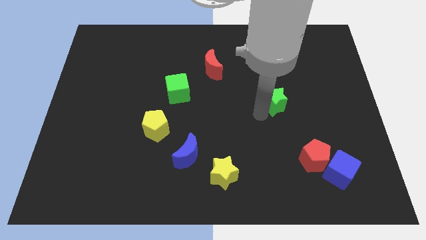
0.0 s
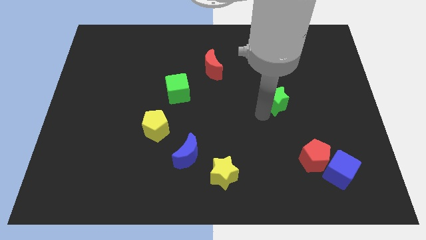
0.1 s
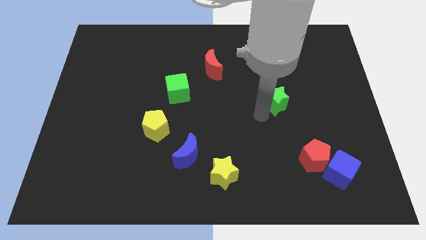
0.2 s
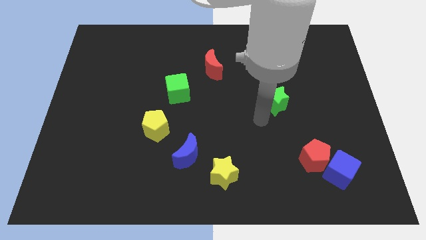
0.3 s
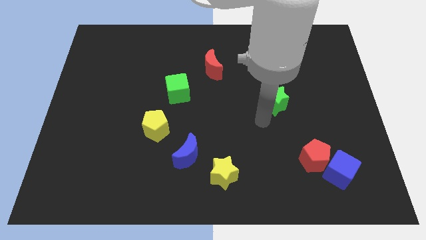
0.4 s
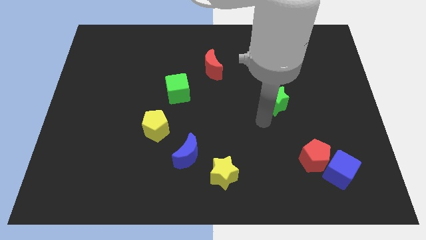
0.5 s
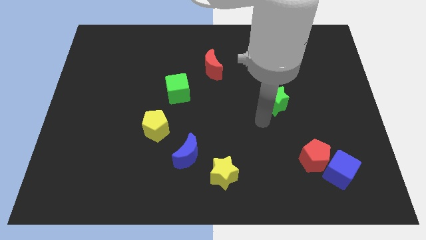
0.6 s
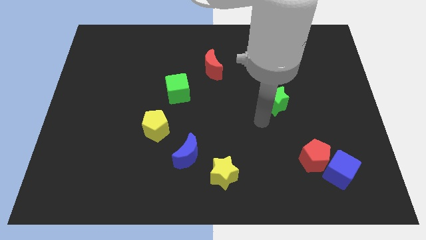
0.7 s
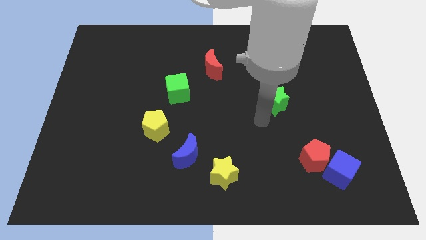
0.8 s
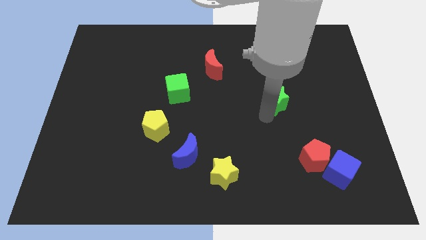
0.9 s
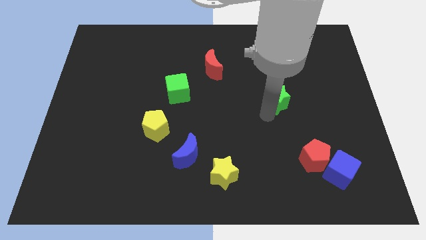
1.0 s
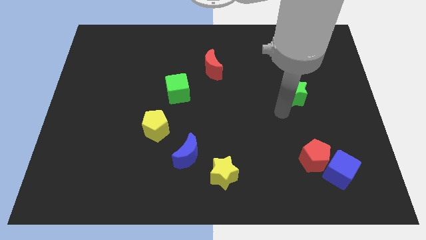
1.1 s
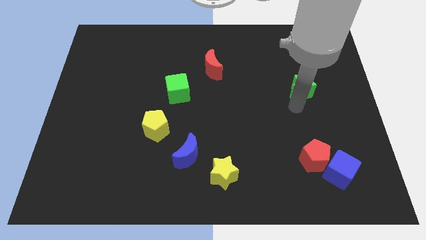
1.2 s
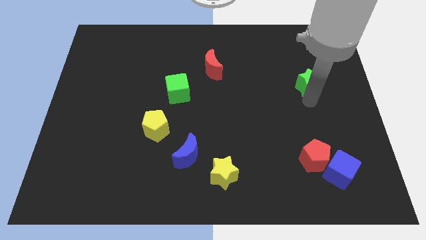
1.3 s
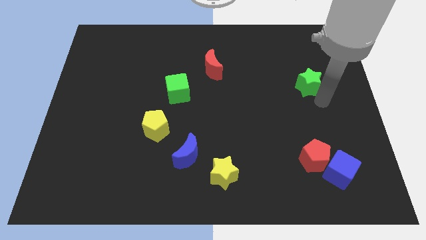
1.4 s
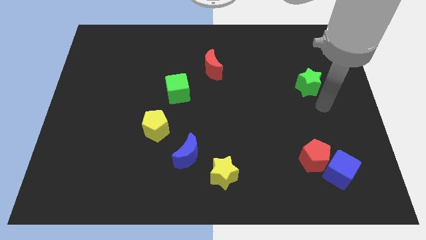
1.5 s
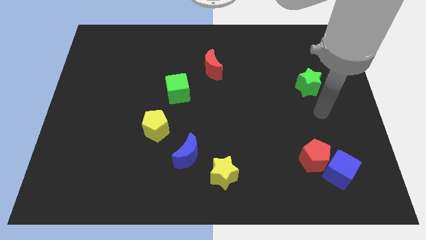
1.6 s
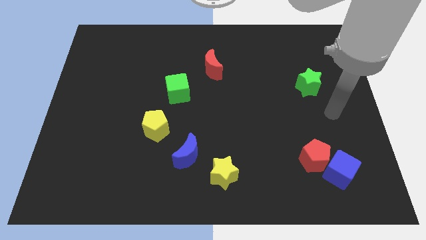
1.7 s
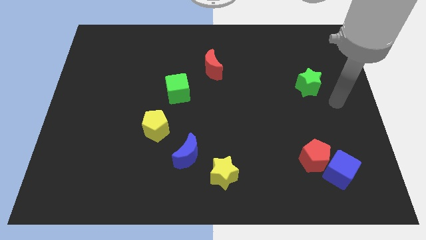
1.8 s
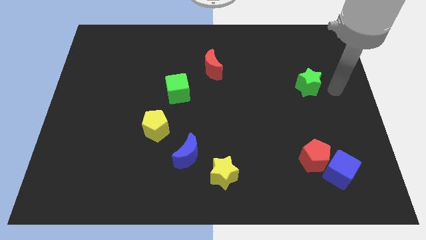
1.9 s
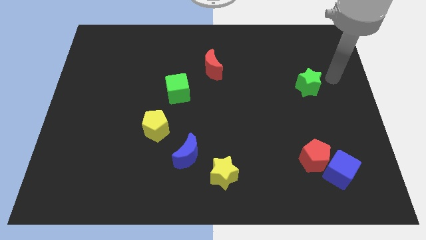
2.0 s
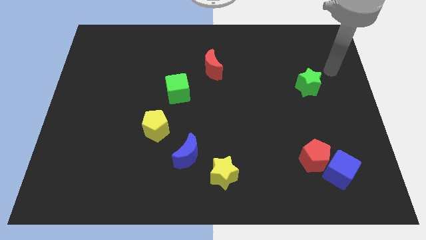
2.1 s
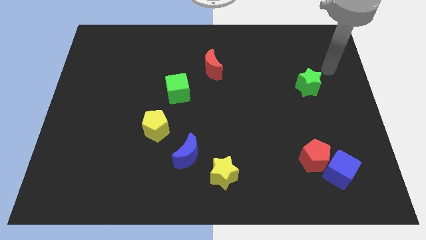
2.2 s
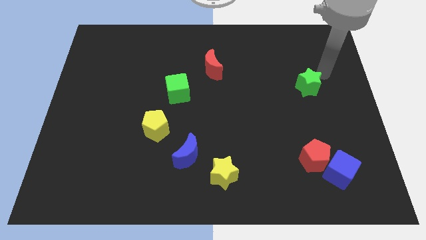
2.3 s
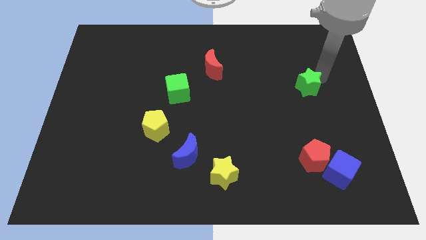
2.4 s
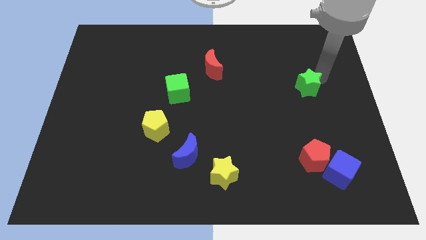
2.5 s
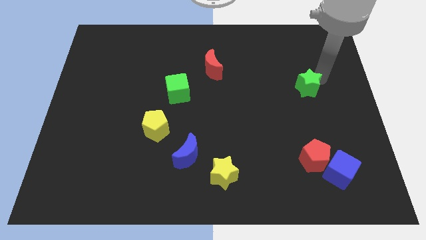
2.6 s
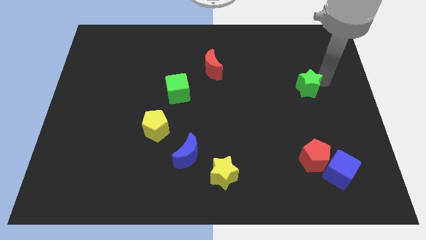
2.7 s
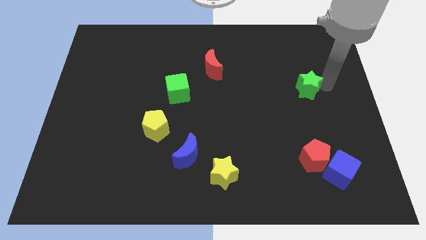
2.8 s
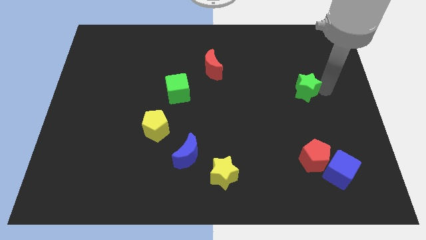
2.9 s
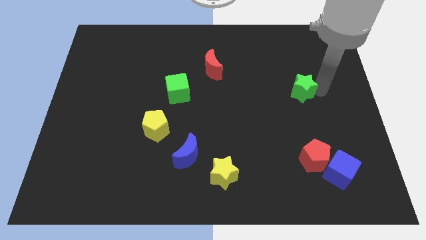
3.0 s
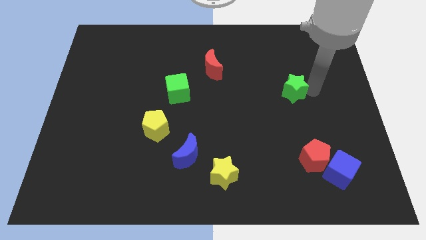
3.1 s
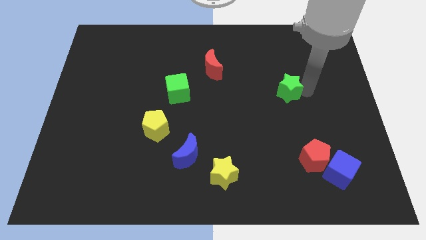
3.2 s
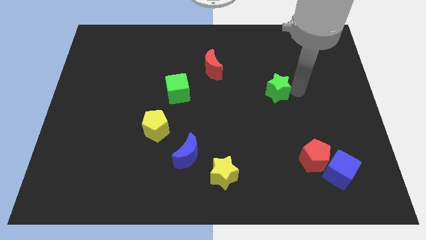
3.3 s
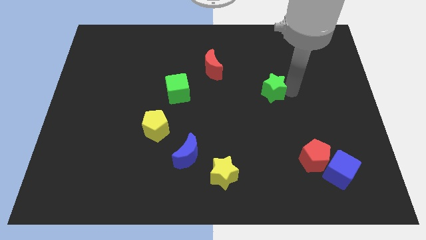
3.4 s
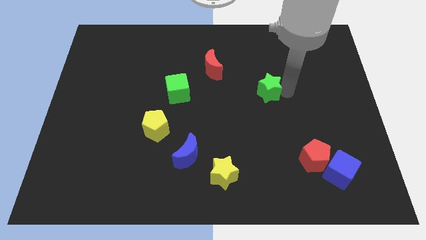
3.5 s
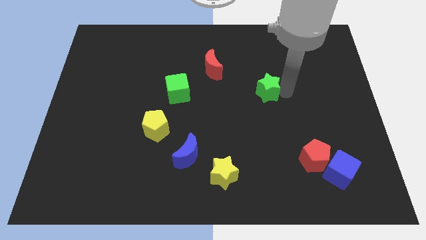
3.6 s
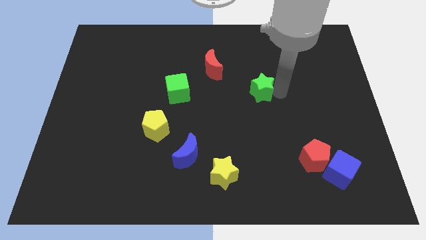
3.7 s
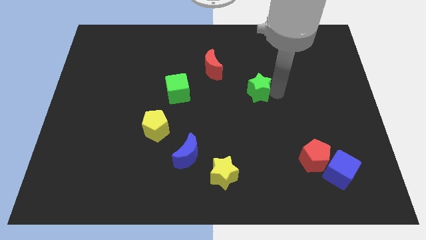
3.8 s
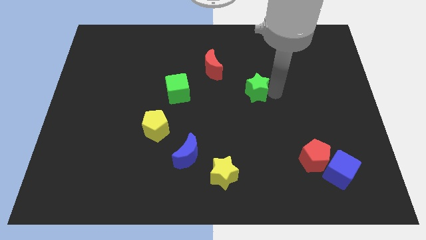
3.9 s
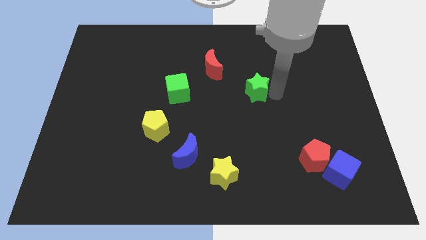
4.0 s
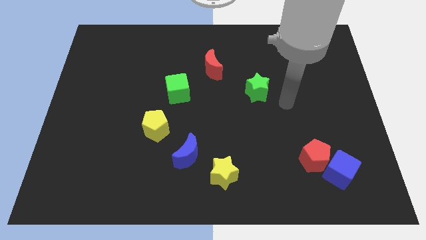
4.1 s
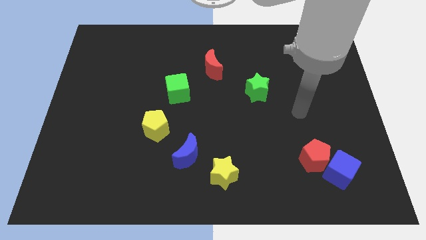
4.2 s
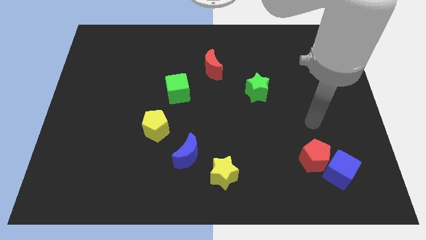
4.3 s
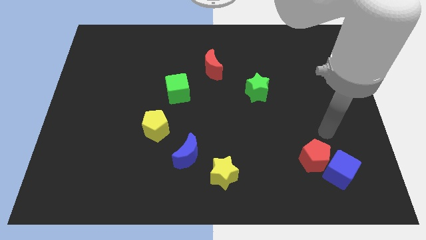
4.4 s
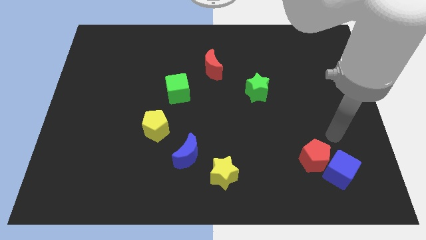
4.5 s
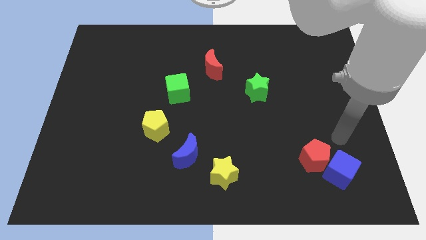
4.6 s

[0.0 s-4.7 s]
put the green star and green cube in a line horizontally

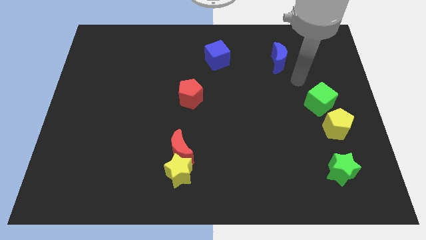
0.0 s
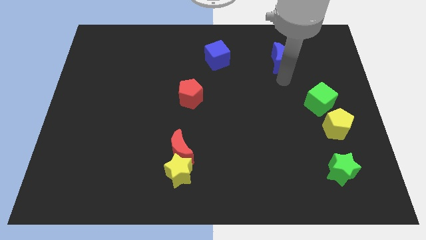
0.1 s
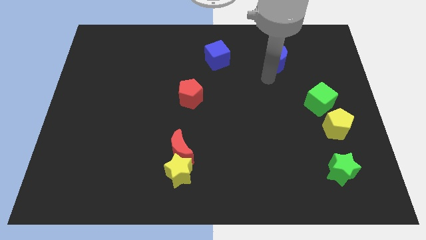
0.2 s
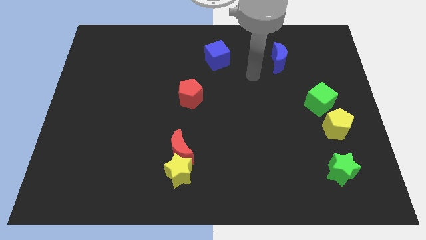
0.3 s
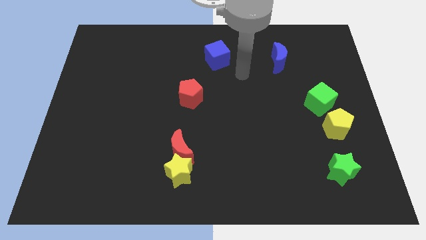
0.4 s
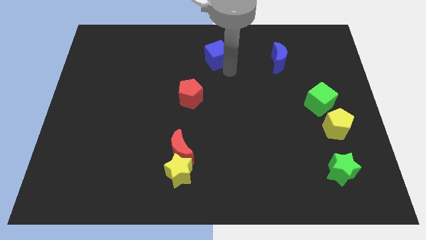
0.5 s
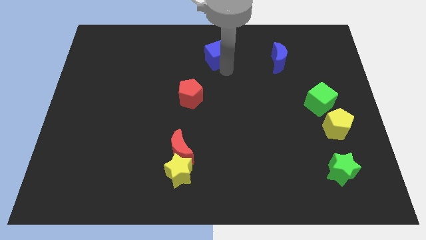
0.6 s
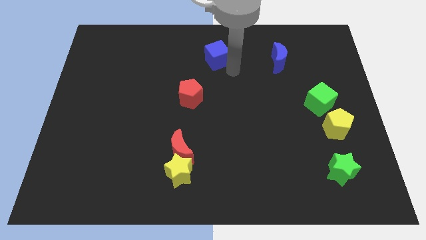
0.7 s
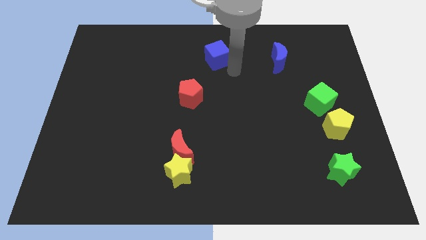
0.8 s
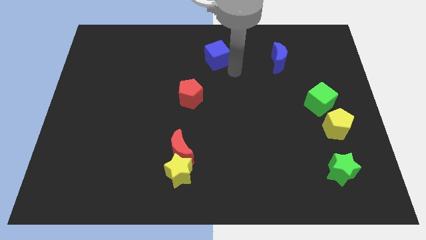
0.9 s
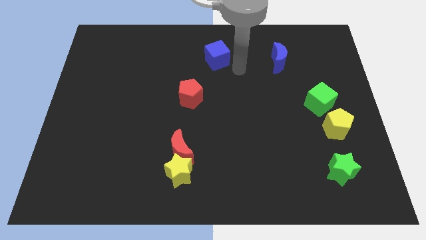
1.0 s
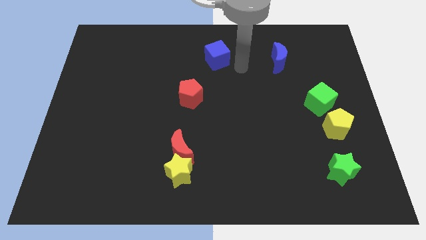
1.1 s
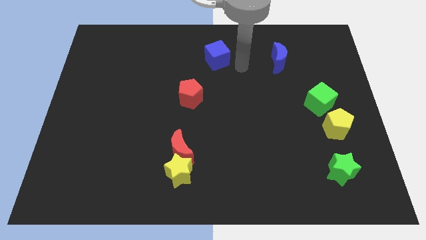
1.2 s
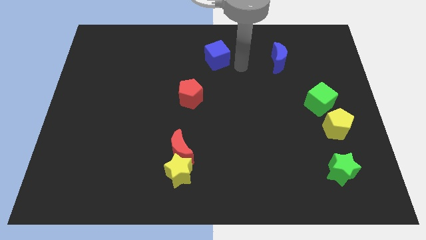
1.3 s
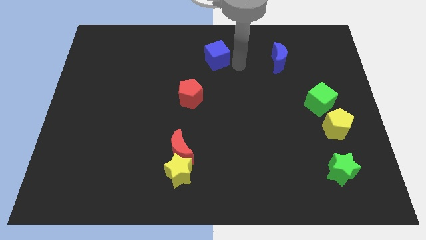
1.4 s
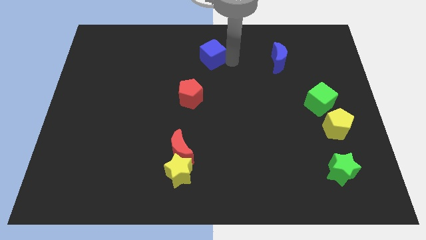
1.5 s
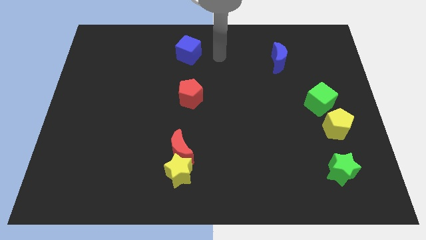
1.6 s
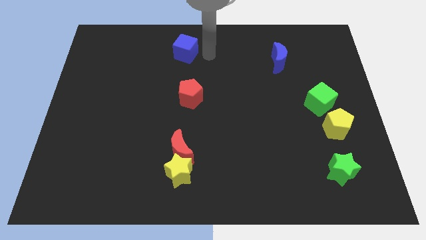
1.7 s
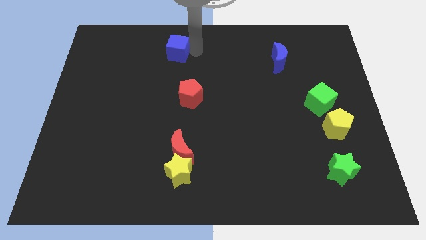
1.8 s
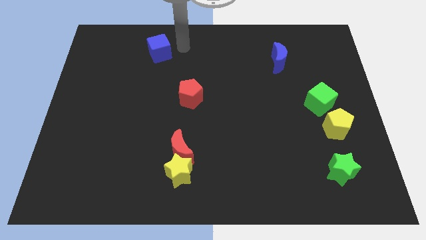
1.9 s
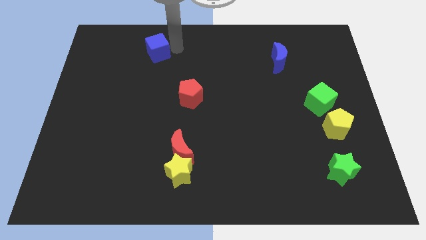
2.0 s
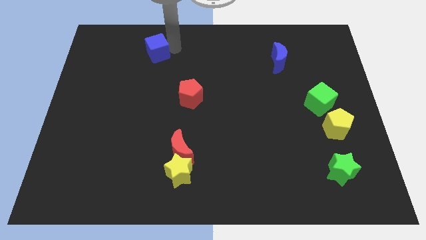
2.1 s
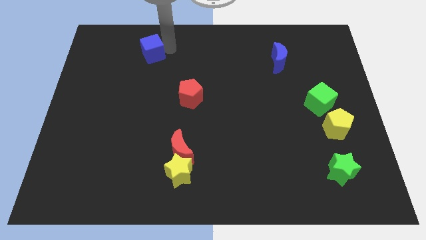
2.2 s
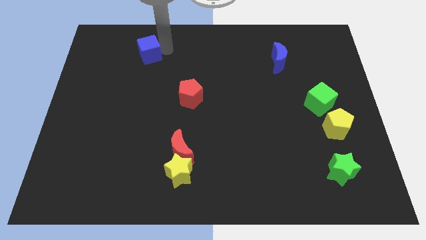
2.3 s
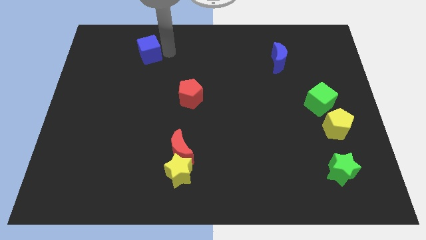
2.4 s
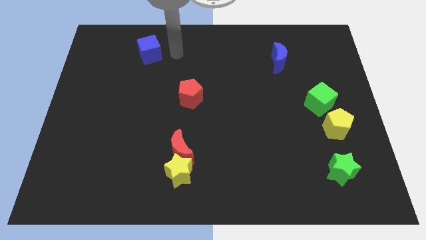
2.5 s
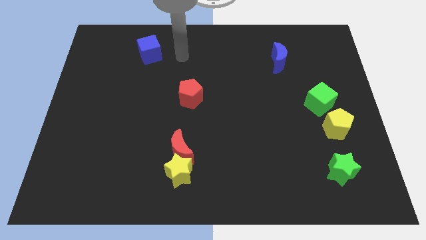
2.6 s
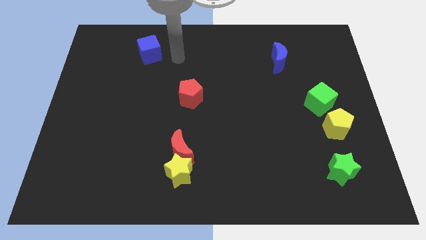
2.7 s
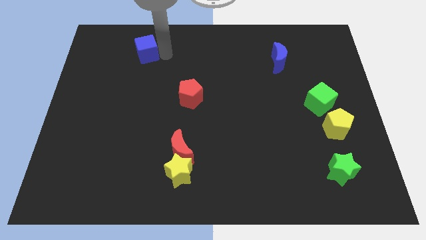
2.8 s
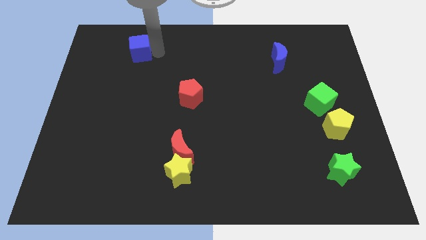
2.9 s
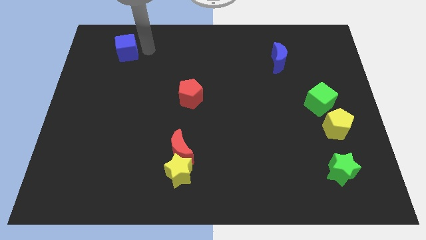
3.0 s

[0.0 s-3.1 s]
slide blue cube towards top left

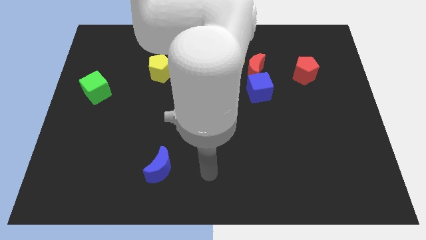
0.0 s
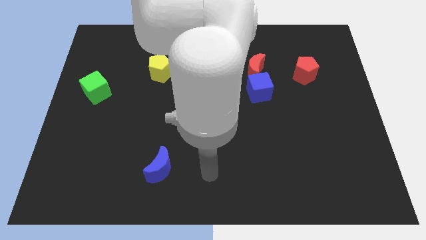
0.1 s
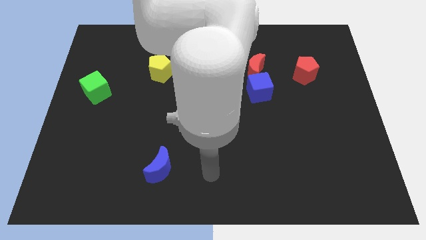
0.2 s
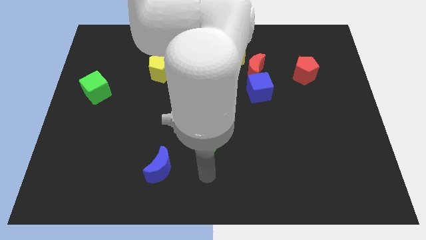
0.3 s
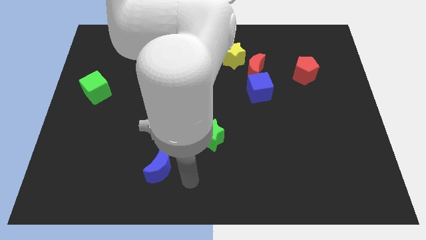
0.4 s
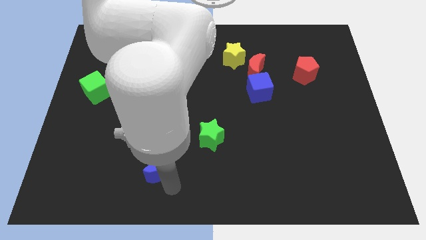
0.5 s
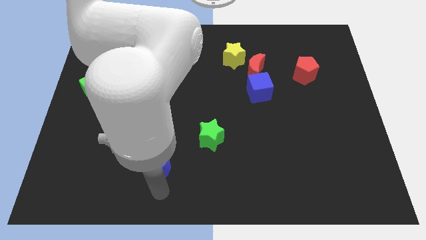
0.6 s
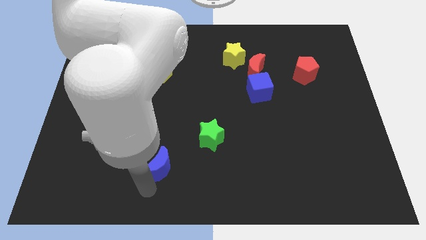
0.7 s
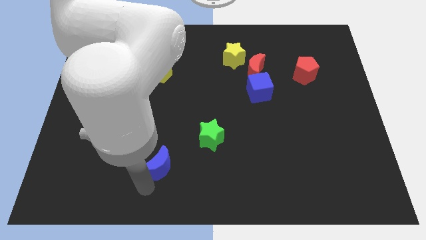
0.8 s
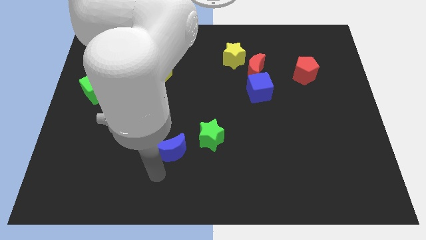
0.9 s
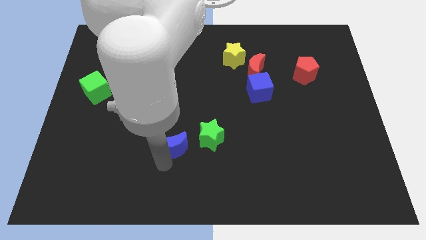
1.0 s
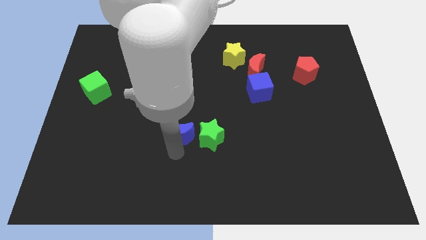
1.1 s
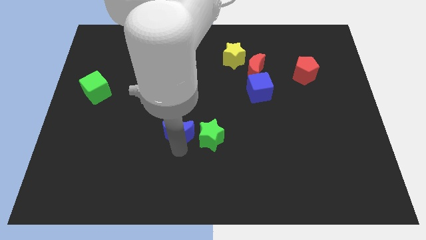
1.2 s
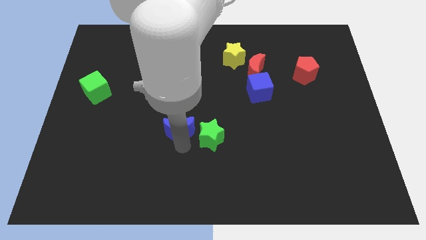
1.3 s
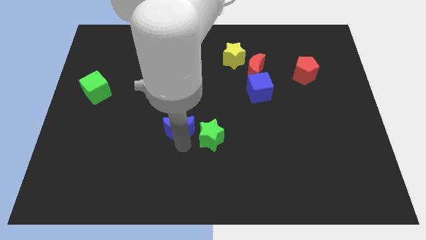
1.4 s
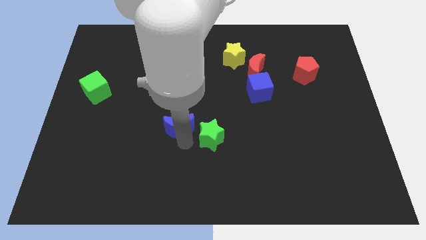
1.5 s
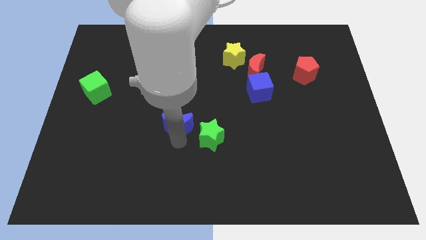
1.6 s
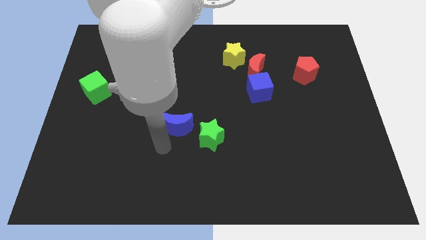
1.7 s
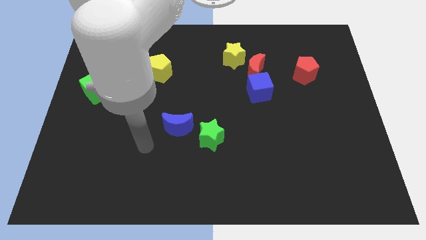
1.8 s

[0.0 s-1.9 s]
push the blue moon to the left of green star
